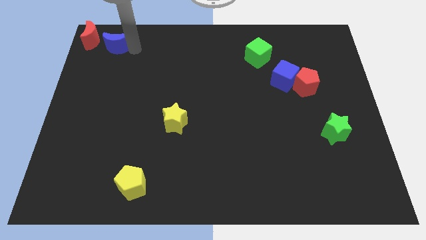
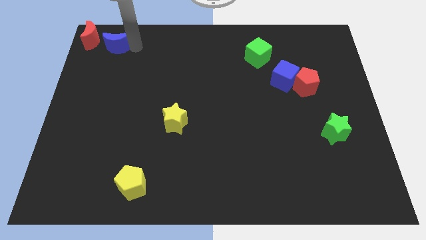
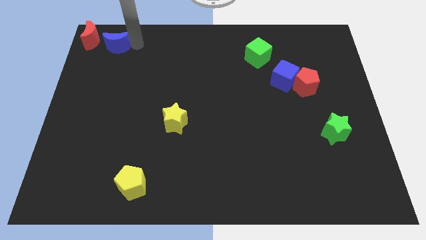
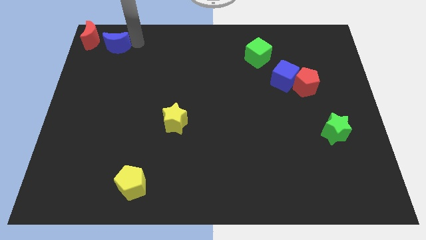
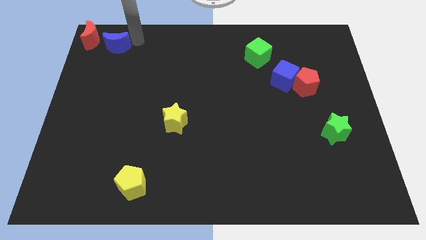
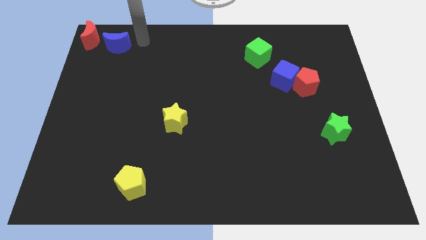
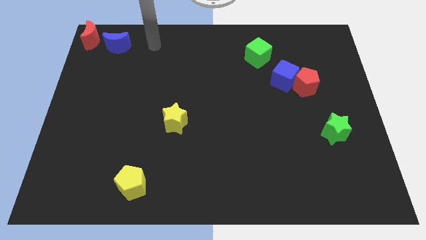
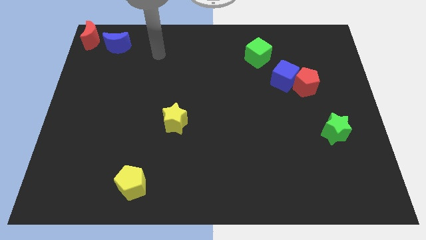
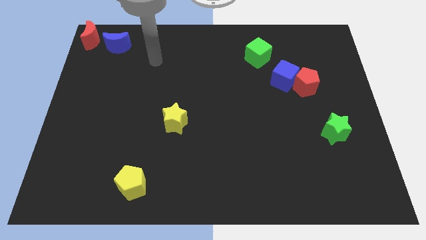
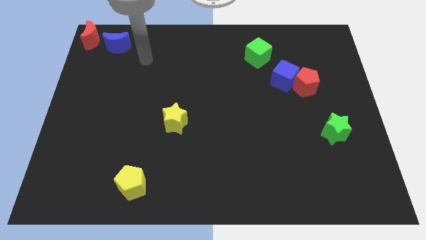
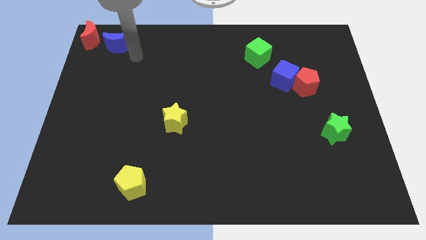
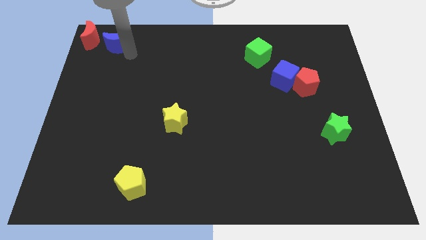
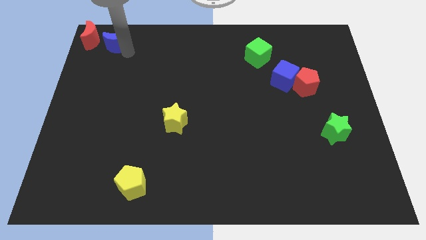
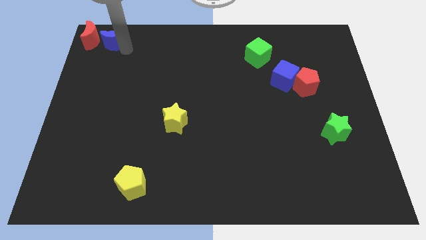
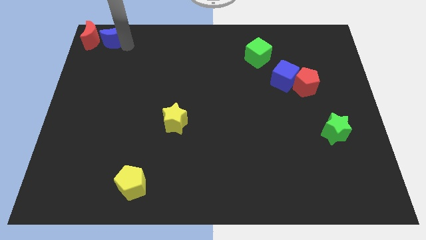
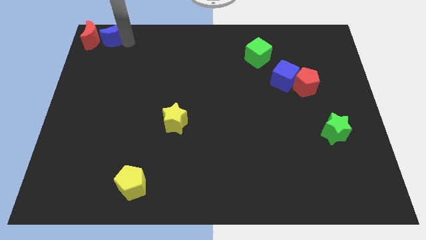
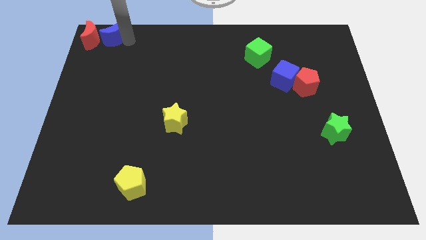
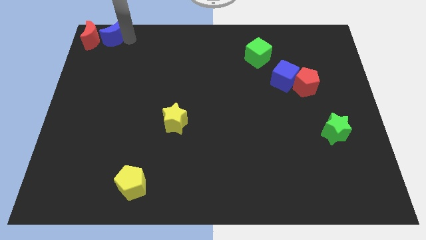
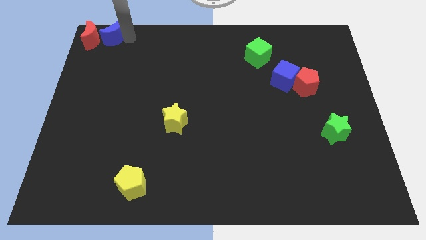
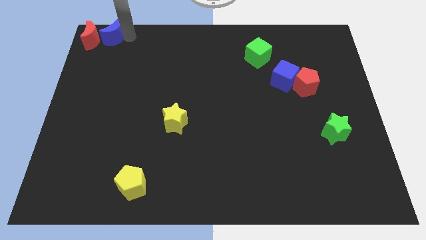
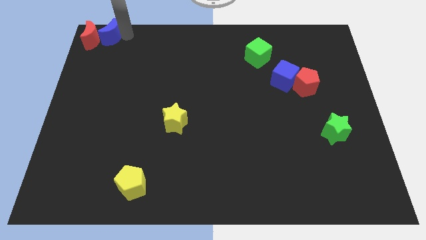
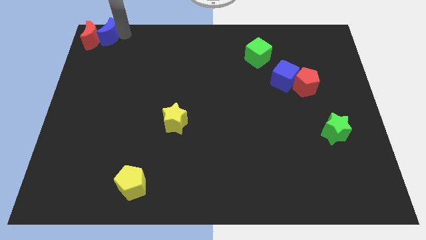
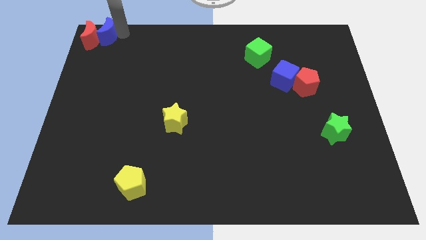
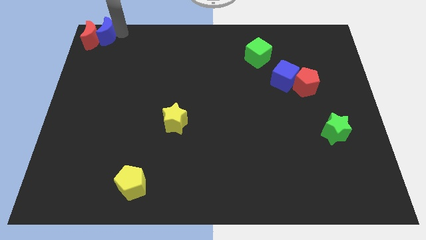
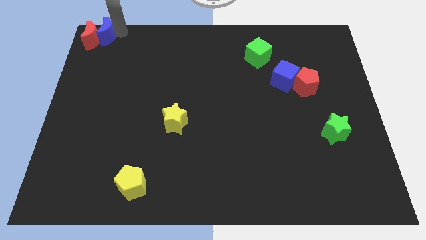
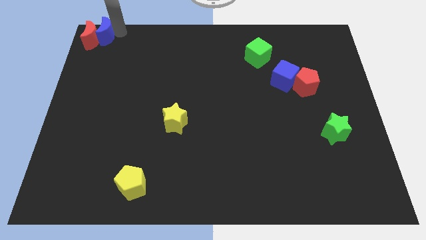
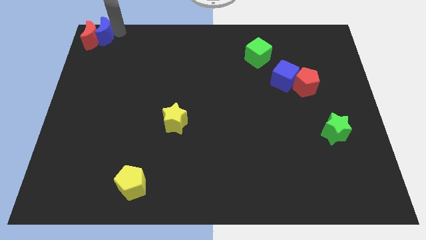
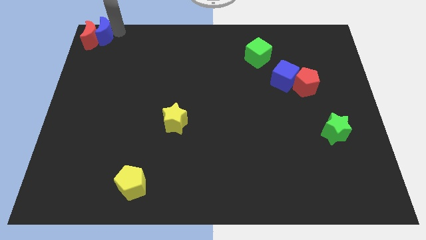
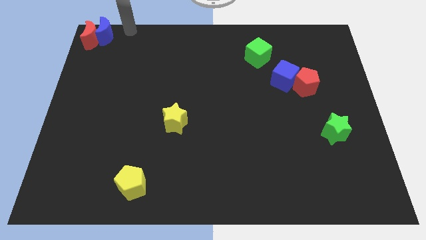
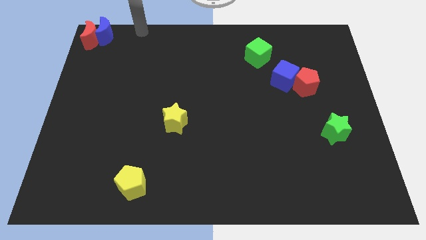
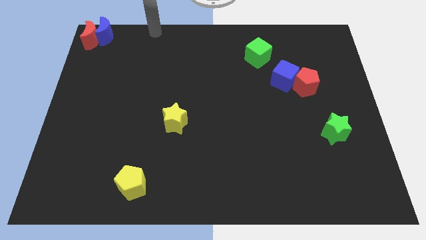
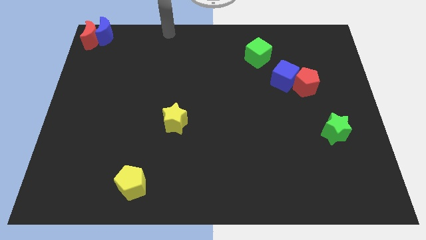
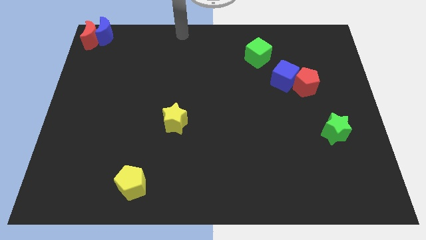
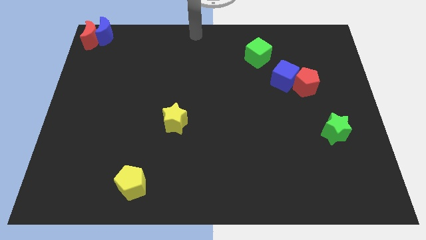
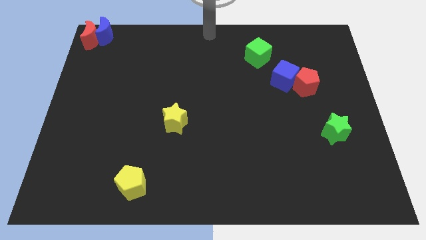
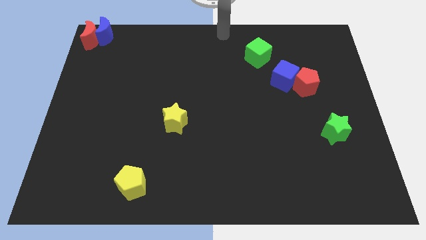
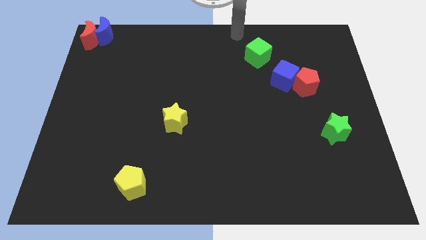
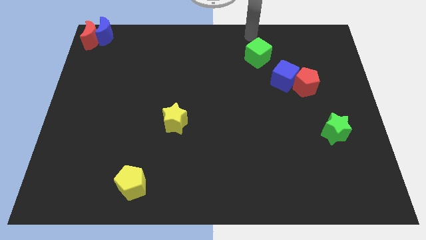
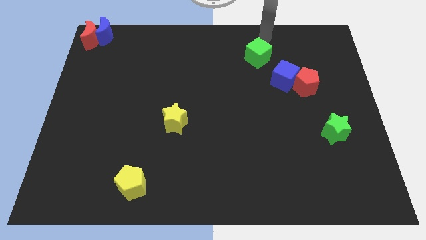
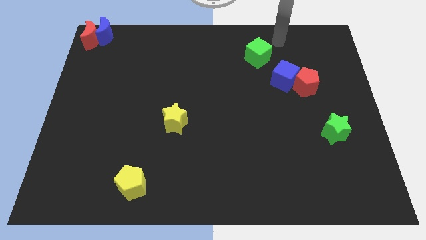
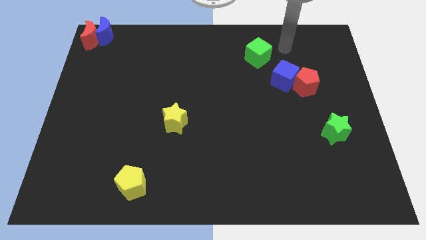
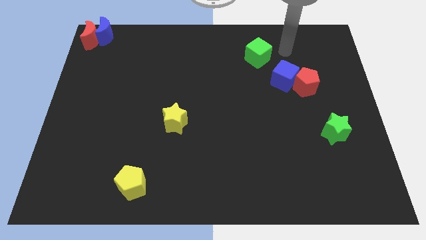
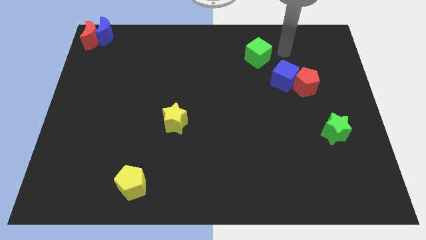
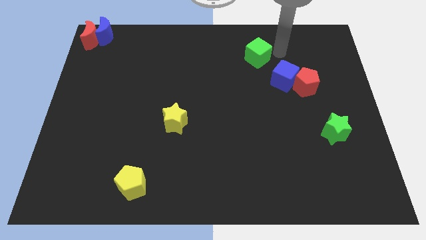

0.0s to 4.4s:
put the blue semicircle and red moon together

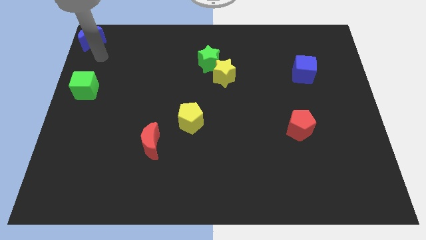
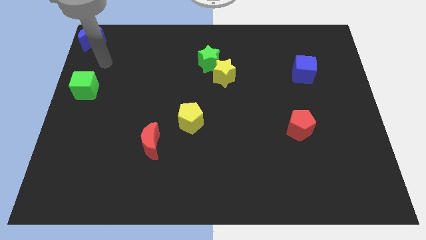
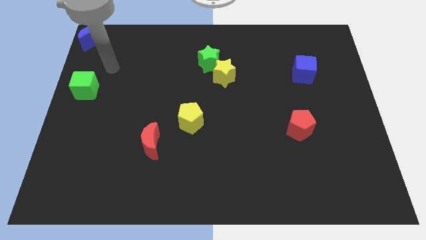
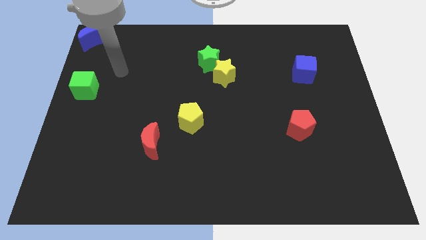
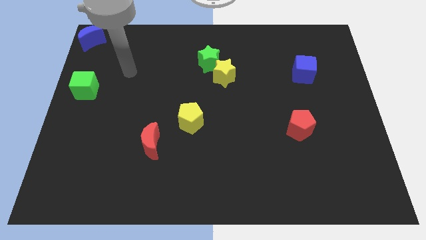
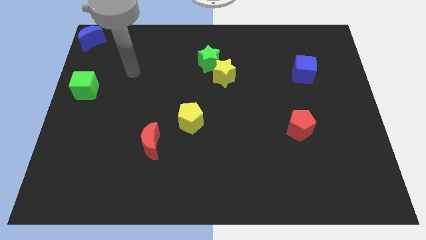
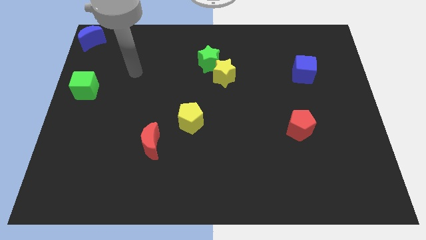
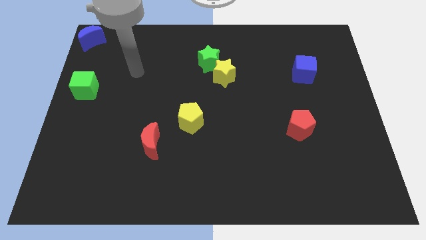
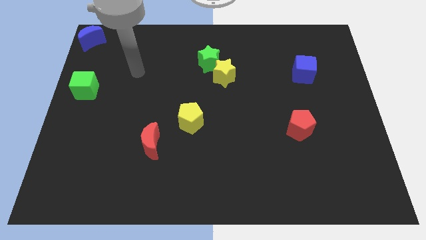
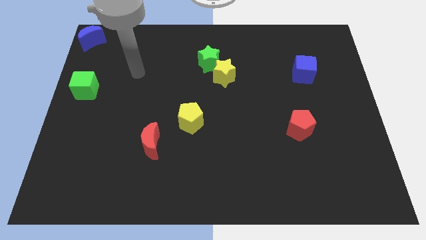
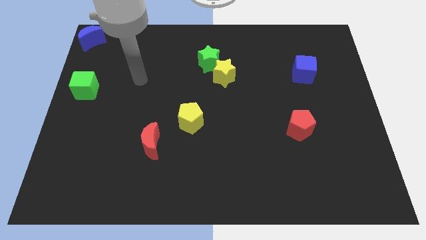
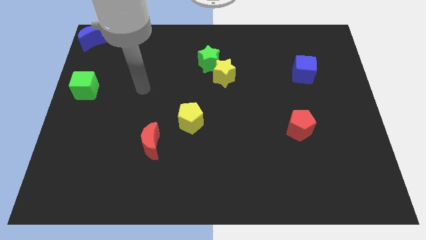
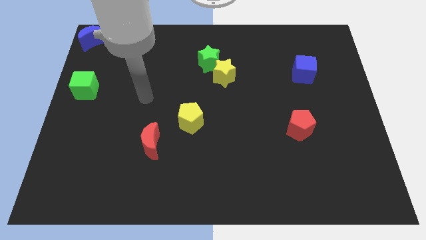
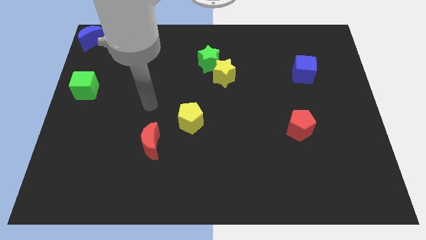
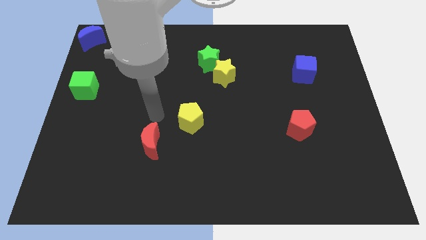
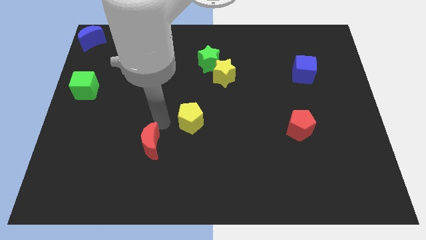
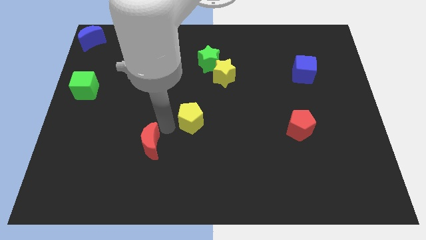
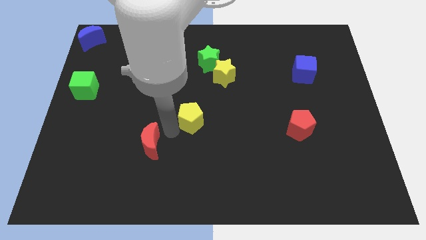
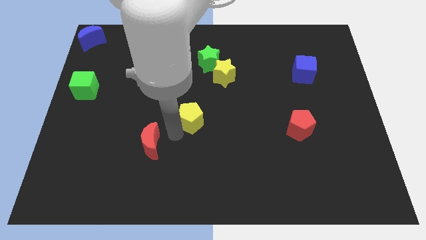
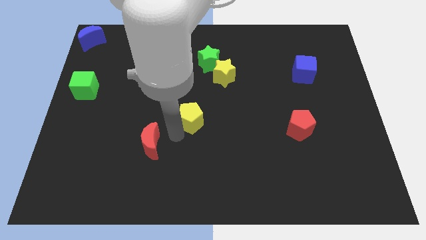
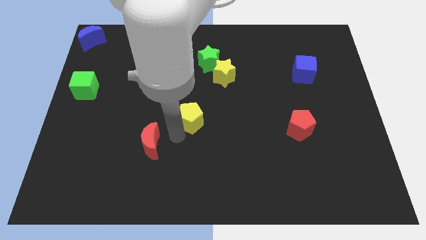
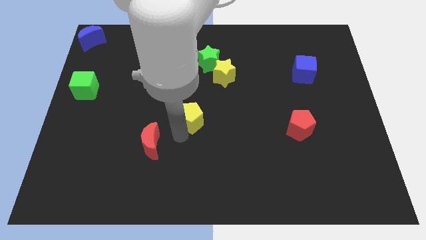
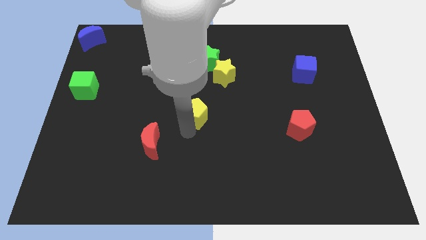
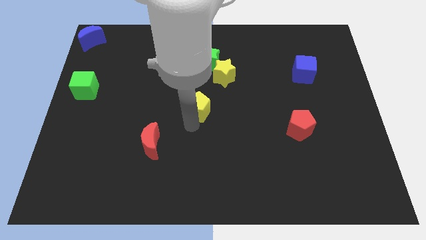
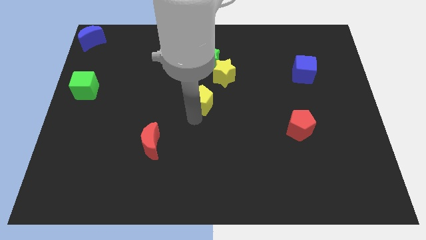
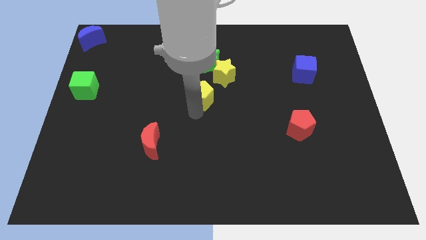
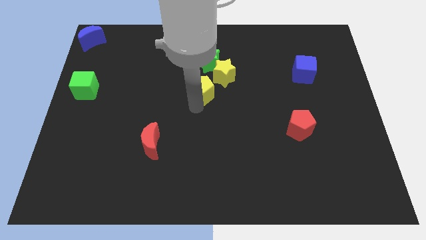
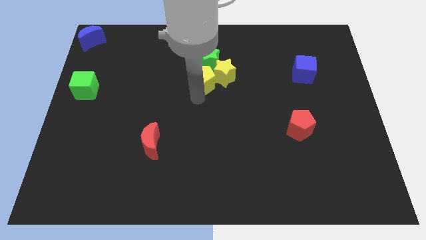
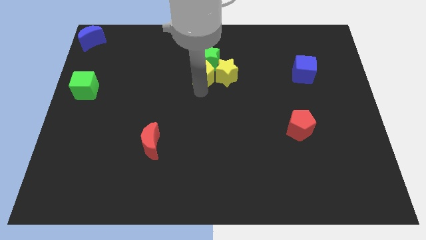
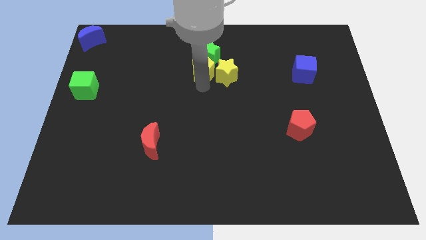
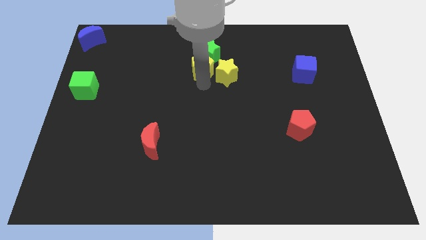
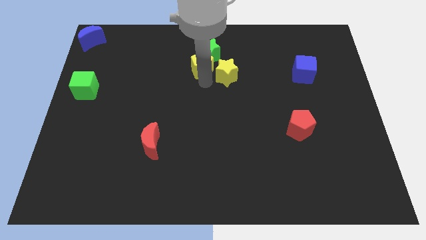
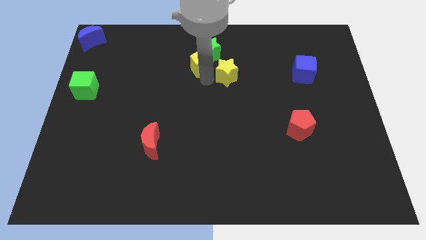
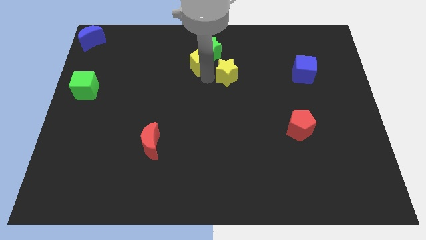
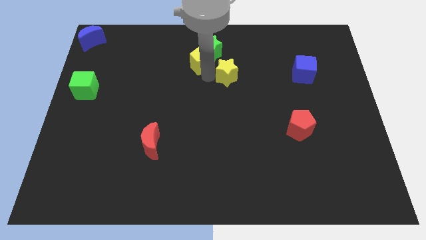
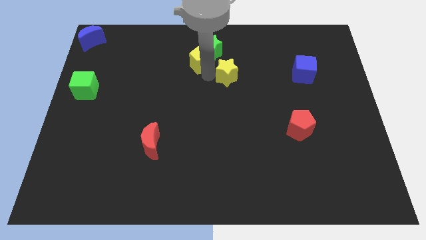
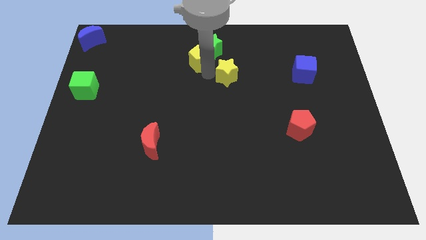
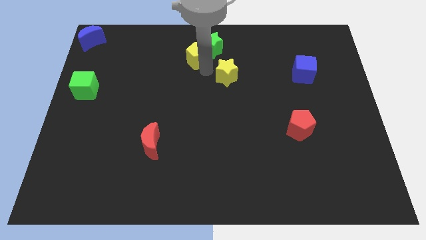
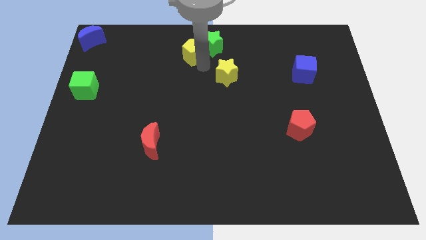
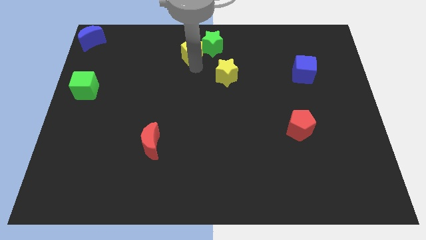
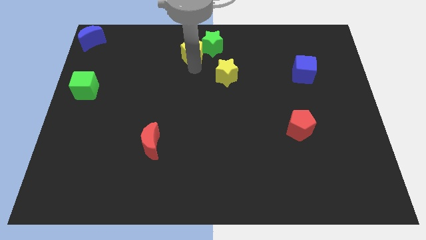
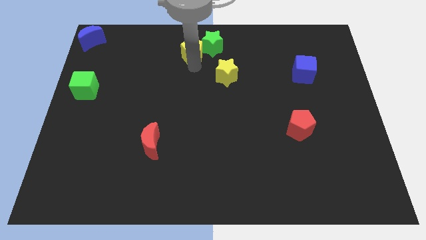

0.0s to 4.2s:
push the yellow pentagon into the green star

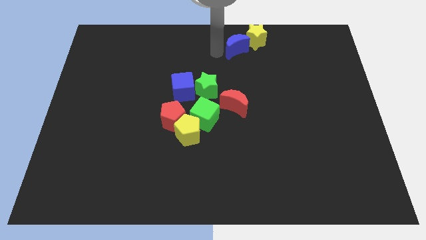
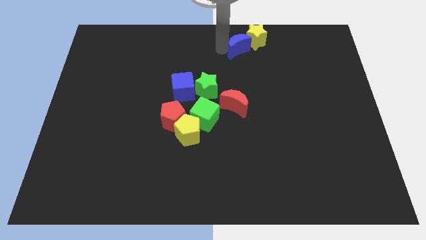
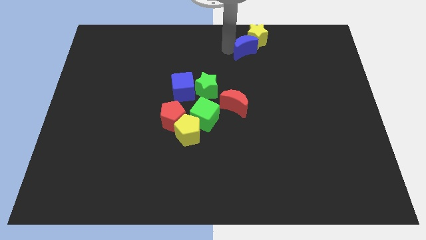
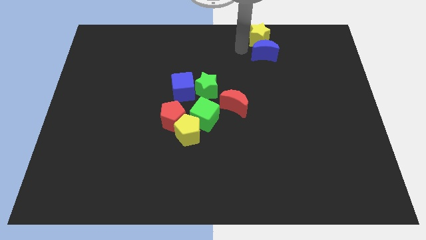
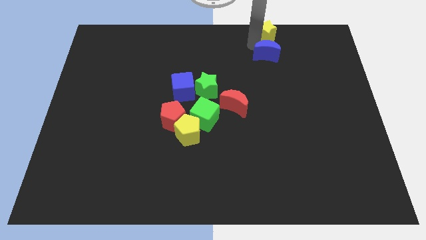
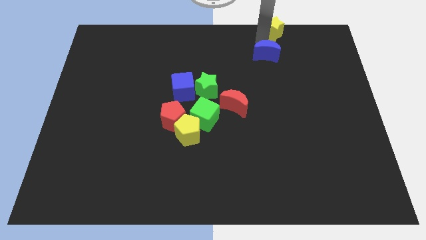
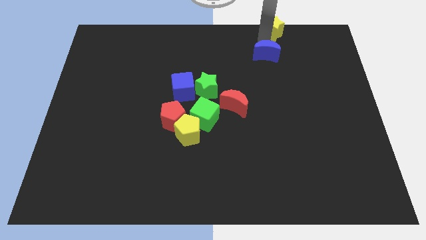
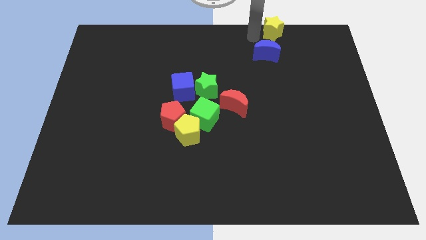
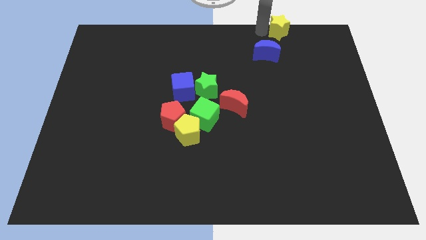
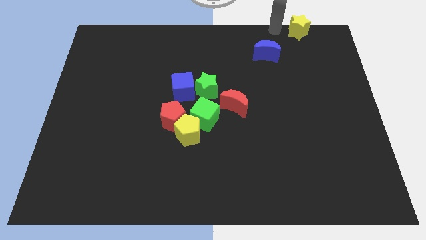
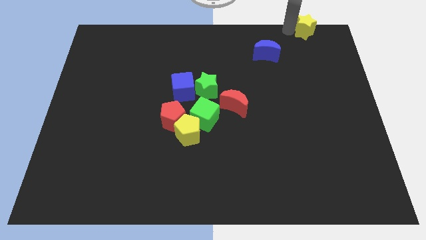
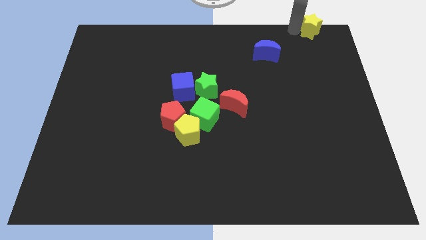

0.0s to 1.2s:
move the yellow star to the top right side of the board
